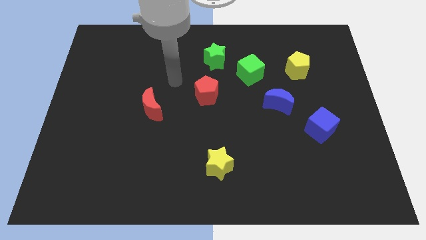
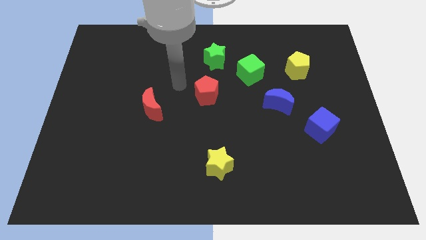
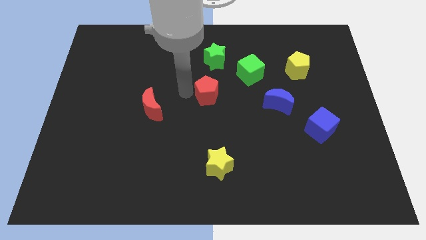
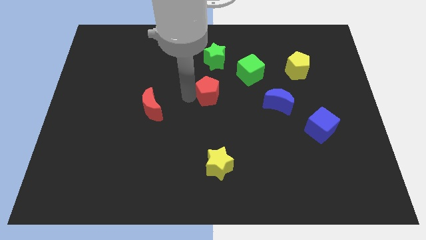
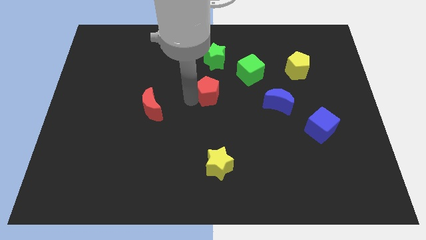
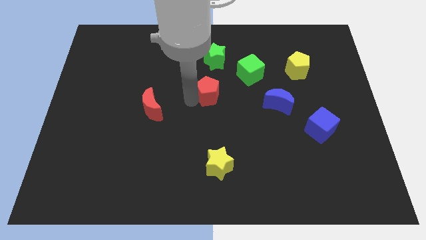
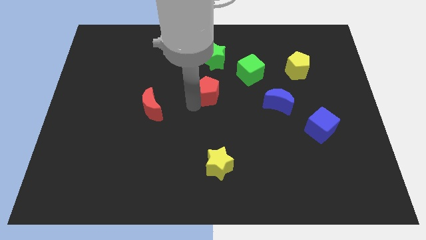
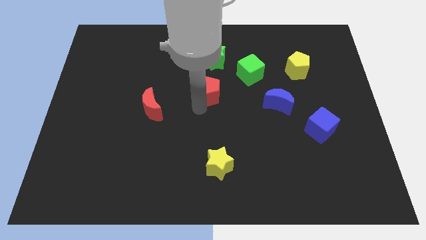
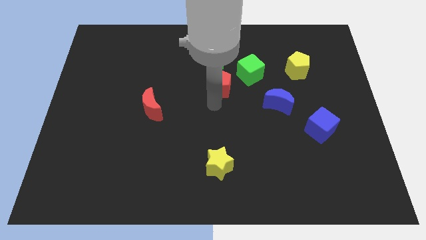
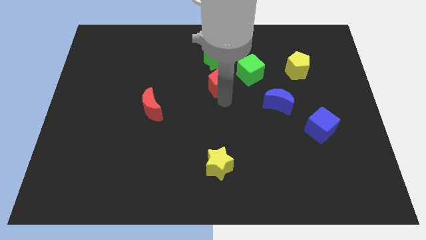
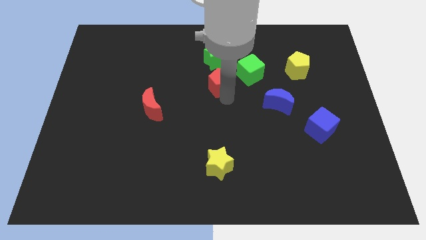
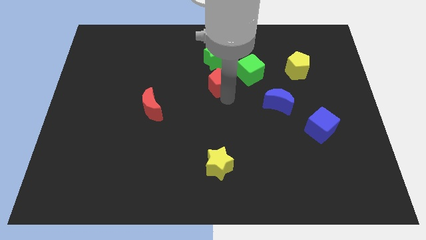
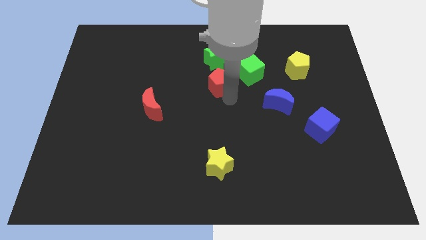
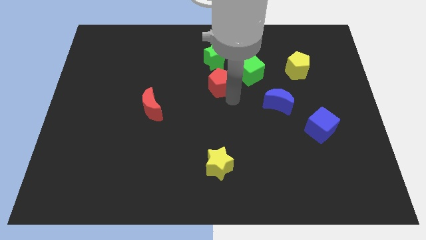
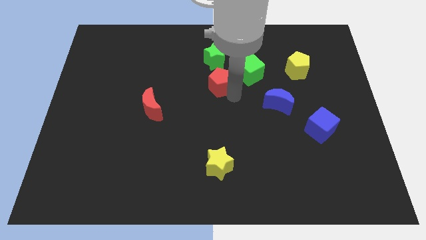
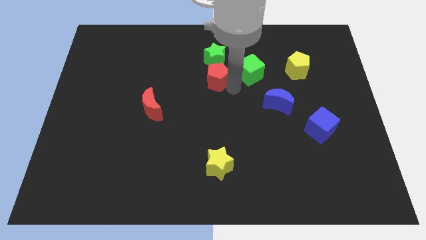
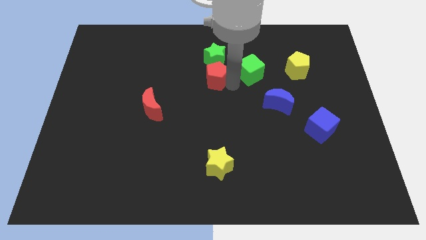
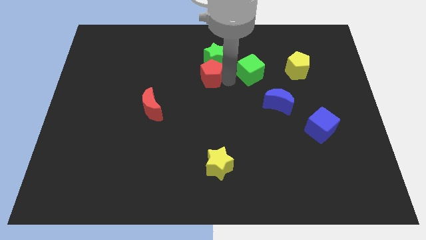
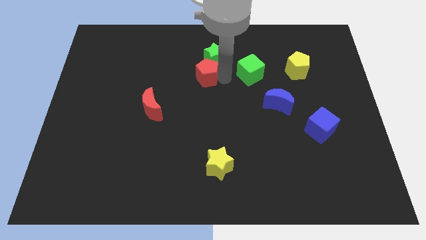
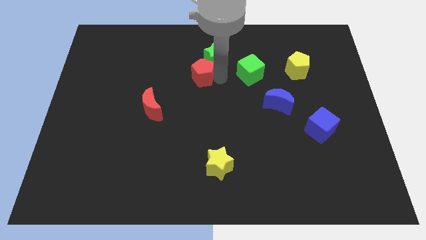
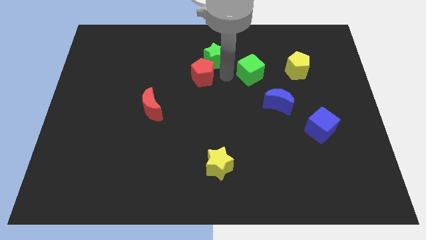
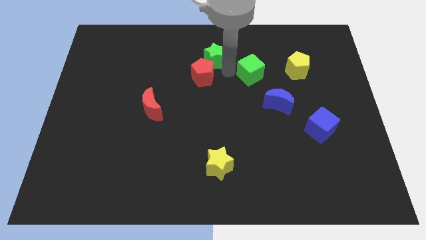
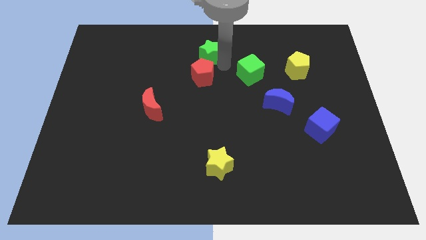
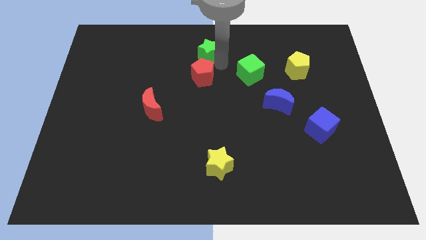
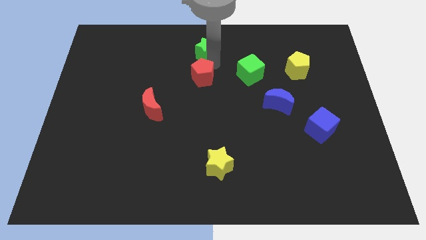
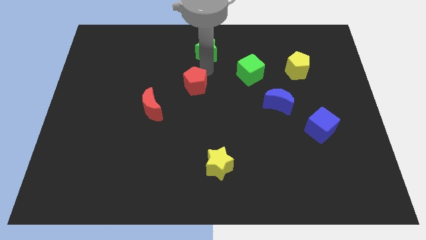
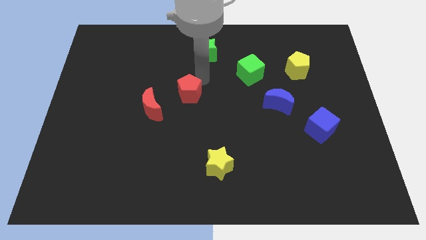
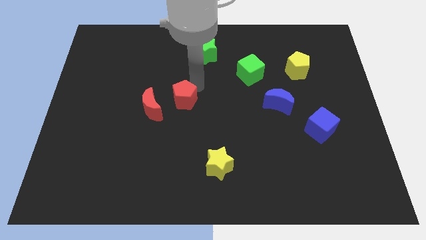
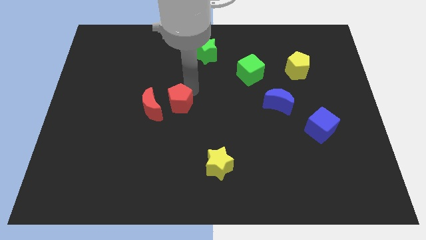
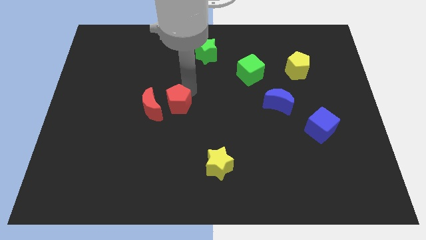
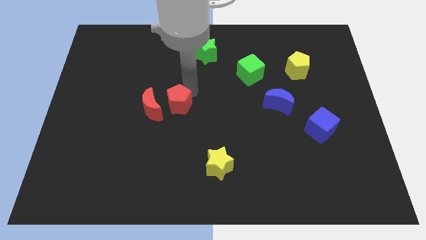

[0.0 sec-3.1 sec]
move the red pentagon to the left of the green cube

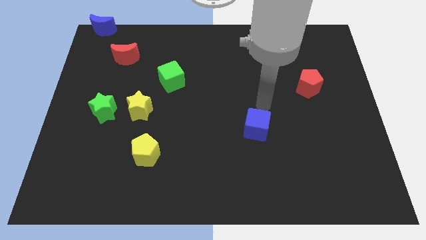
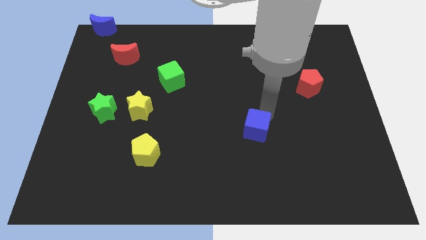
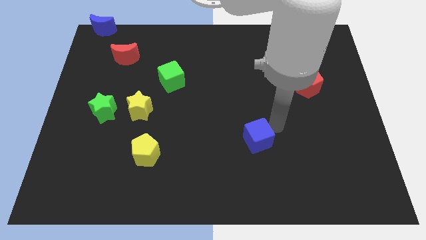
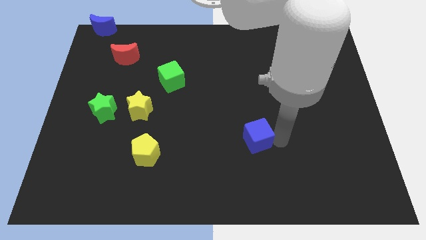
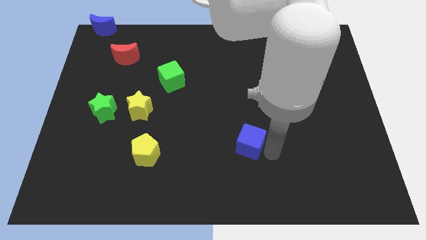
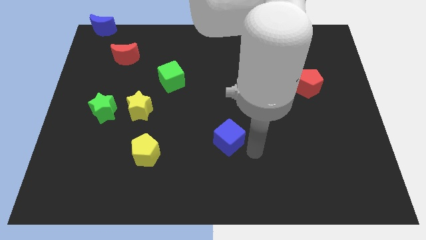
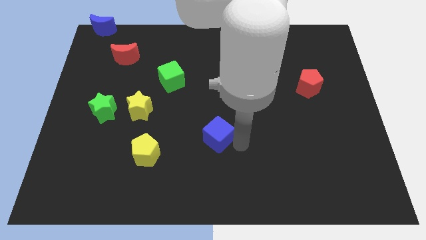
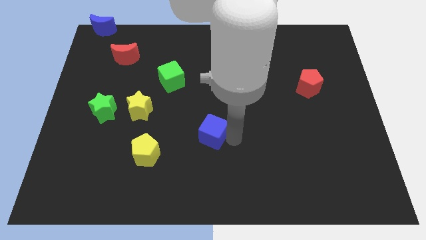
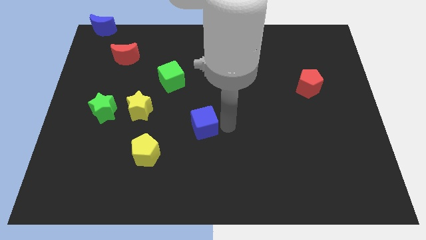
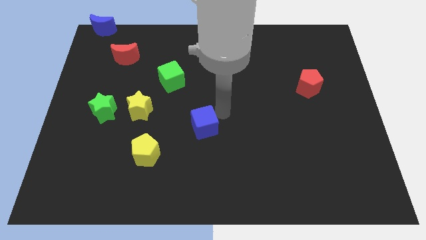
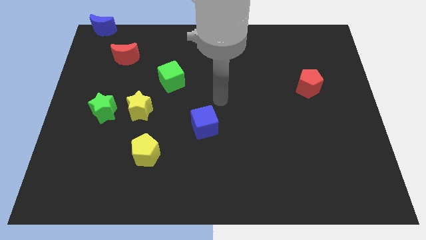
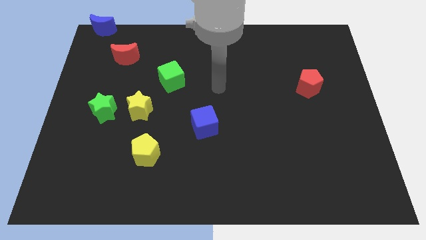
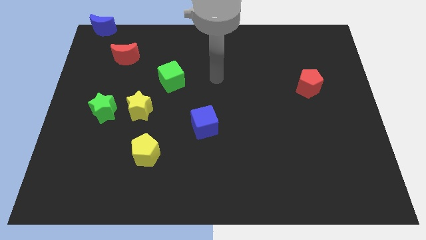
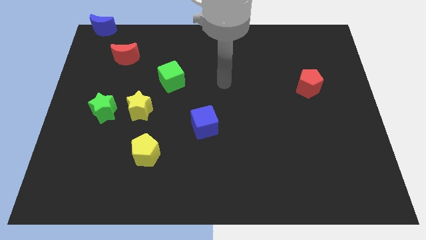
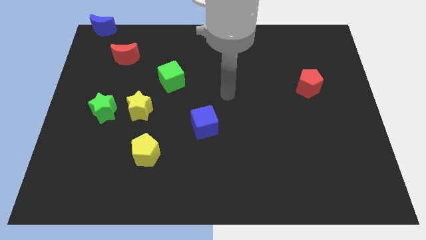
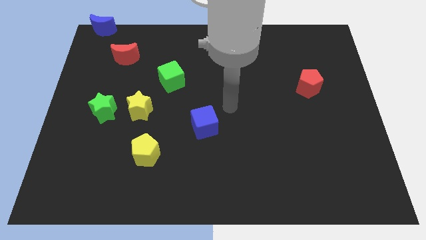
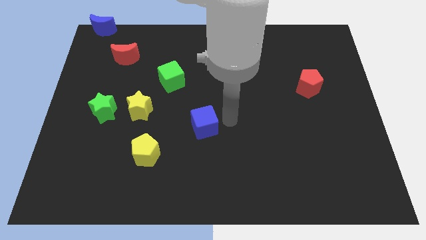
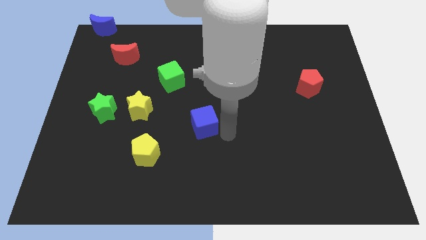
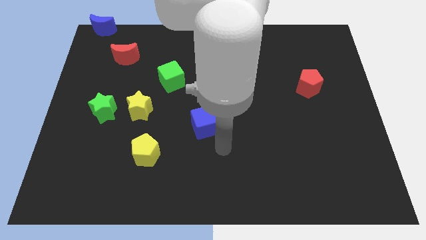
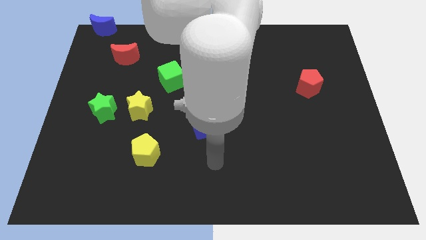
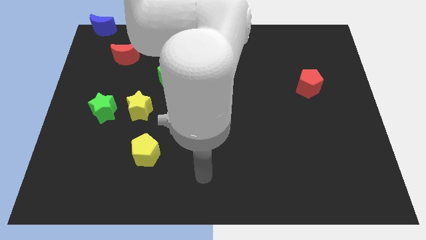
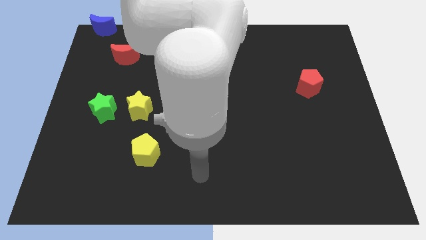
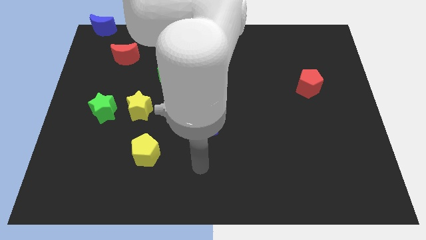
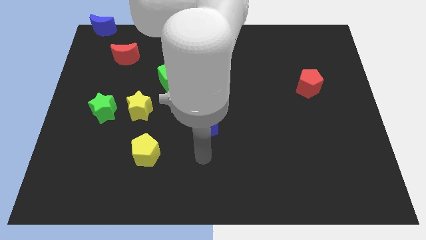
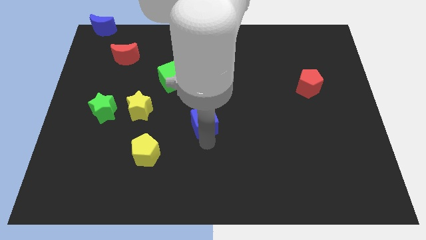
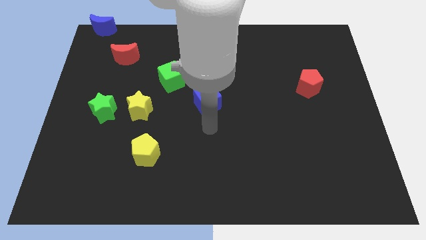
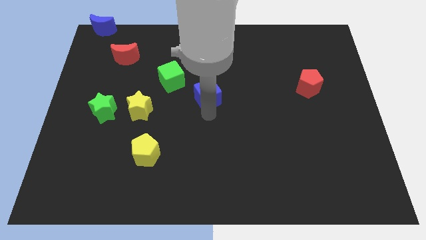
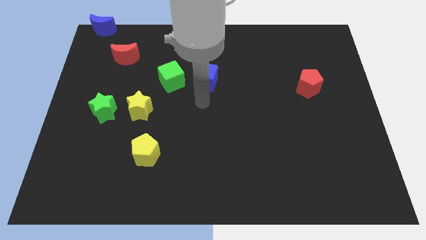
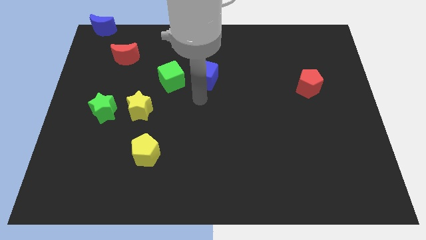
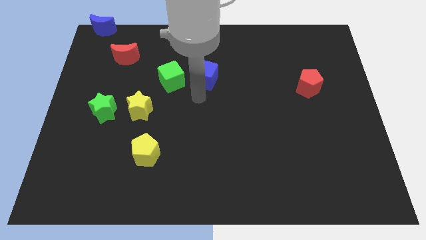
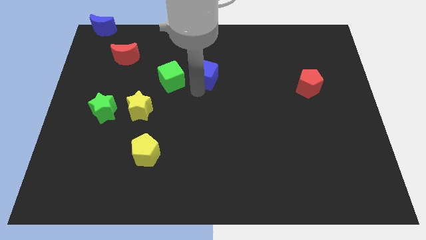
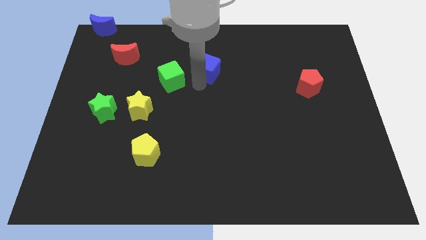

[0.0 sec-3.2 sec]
place the blue cube parallel to green cube

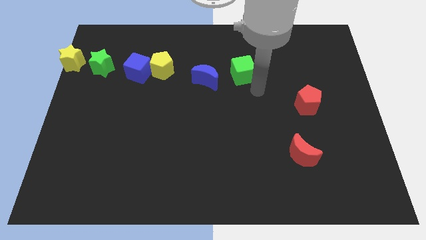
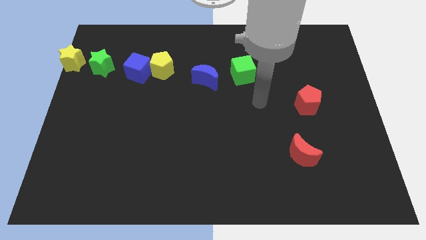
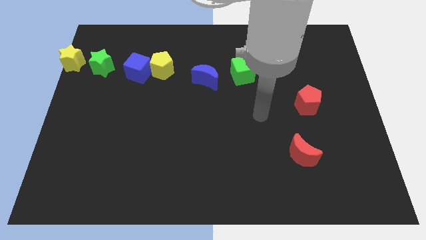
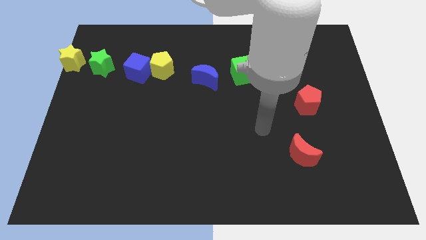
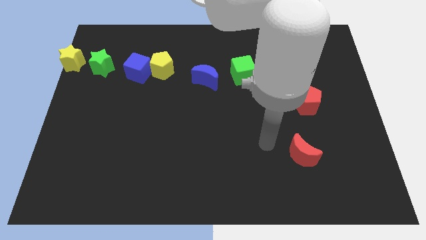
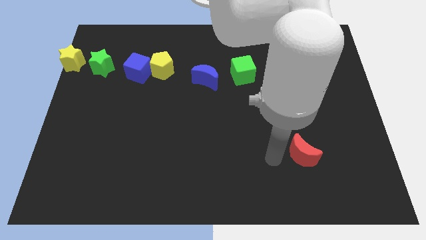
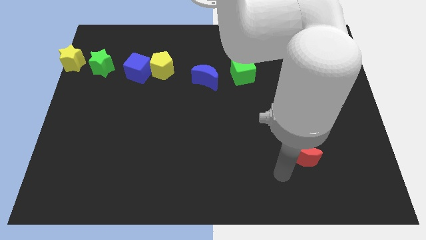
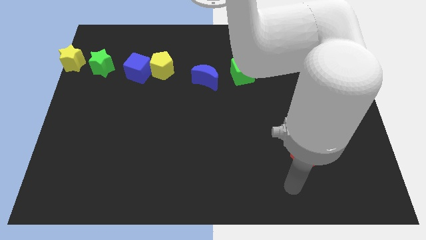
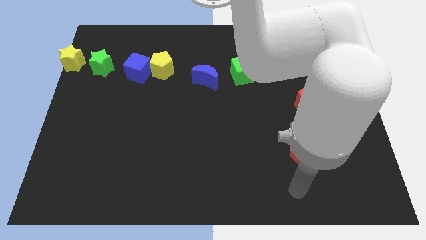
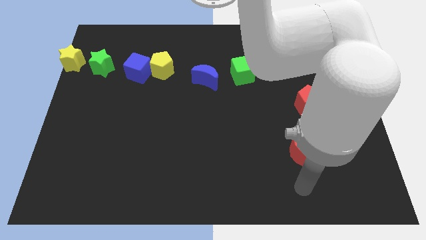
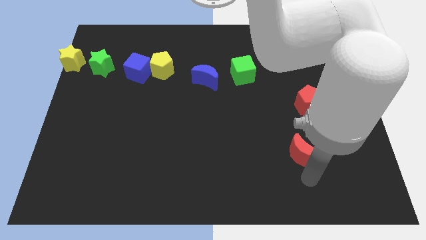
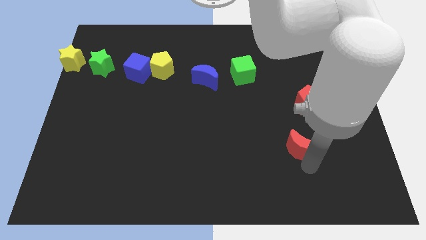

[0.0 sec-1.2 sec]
point your arm at the bottom of the red crescent

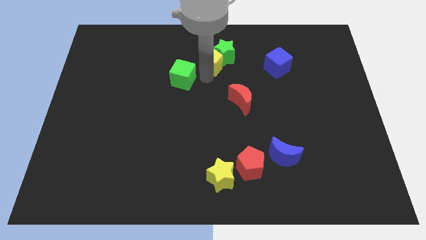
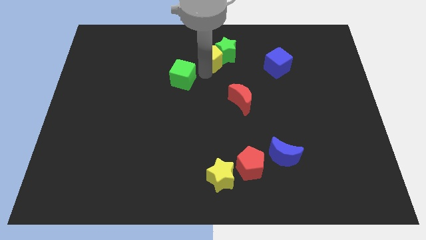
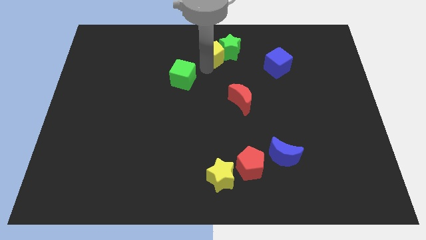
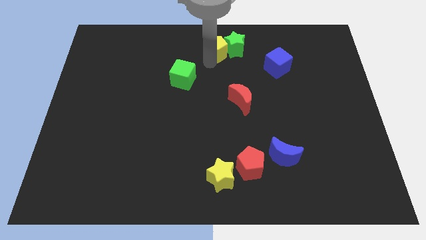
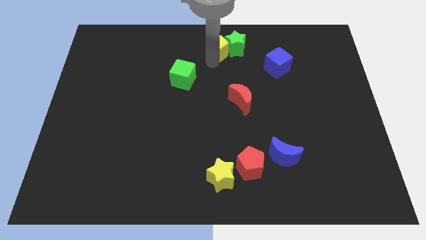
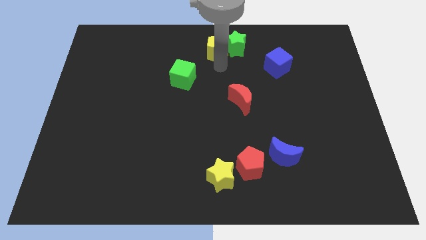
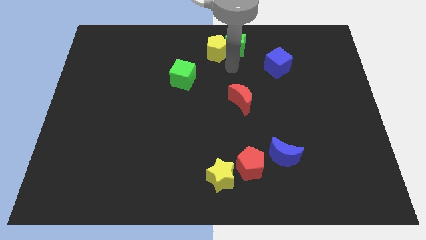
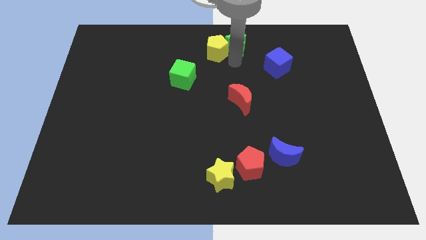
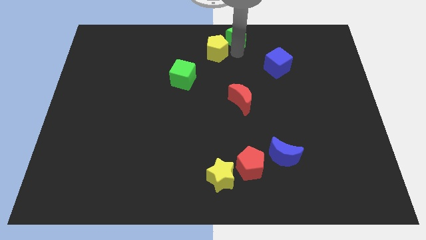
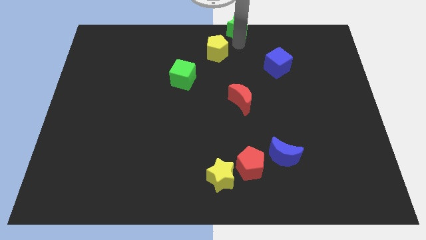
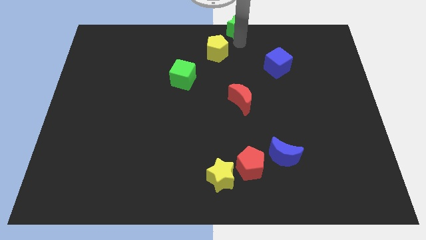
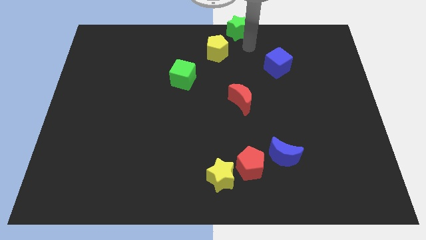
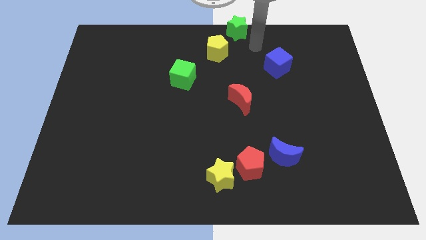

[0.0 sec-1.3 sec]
separate the green star away from the yellow pentagon
